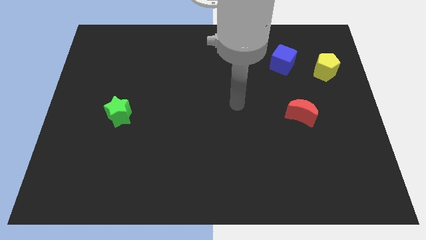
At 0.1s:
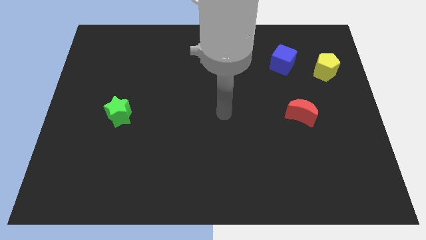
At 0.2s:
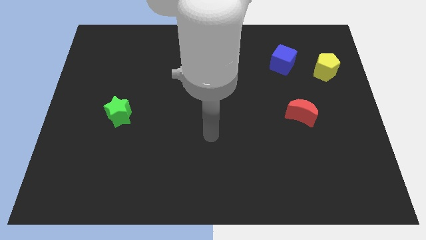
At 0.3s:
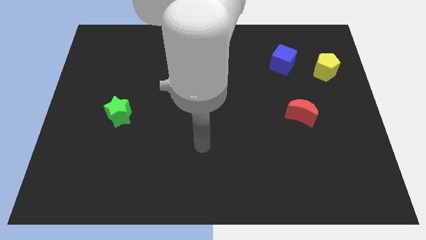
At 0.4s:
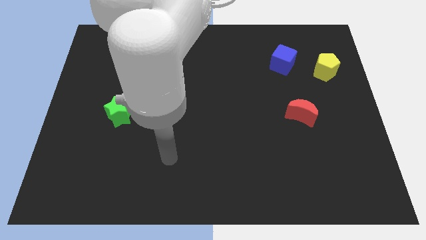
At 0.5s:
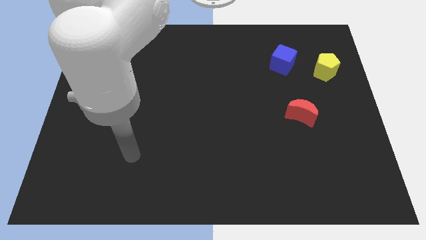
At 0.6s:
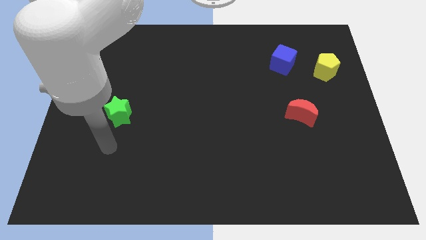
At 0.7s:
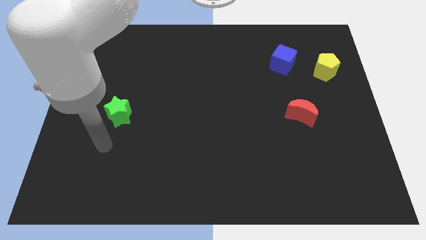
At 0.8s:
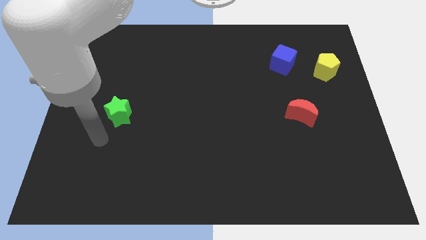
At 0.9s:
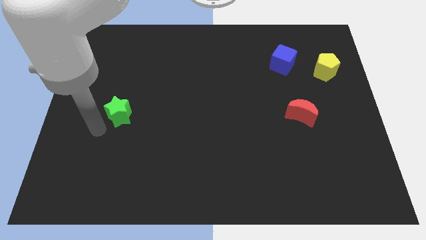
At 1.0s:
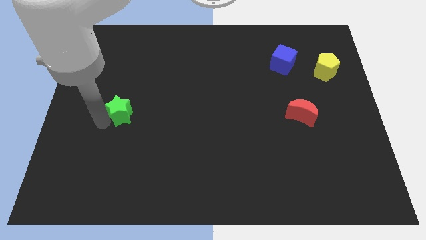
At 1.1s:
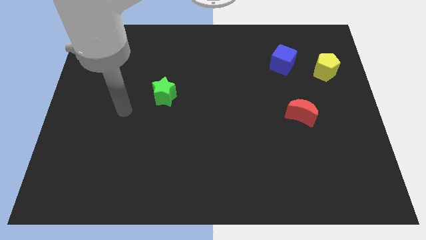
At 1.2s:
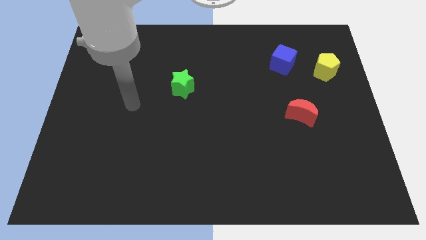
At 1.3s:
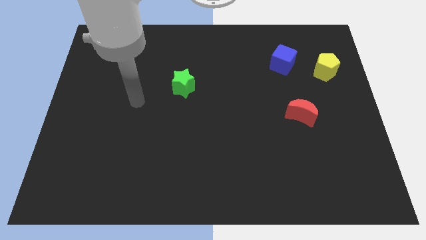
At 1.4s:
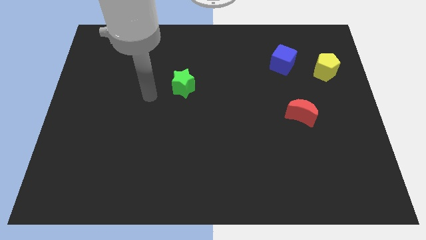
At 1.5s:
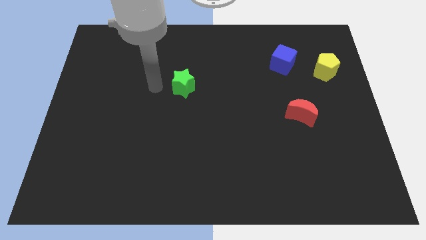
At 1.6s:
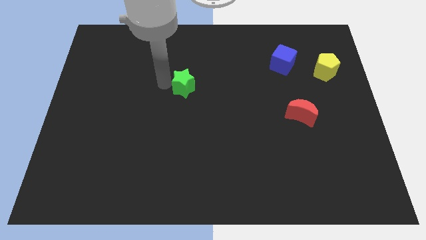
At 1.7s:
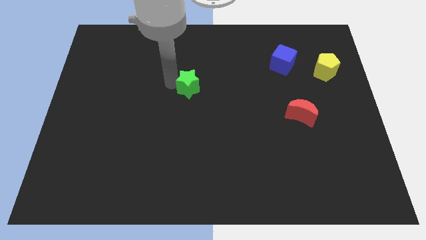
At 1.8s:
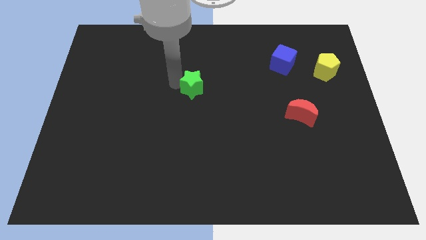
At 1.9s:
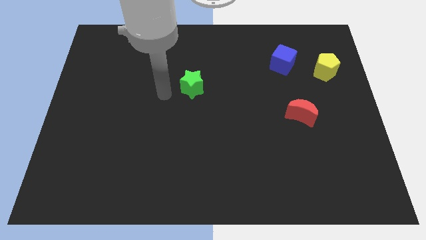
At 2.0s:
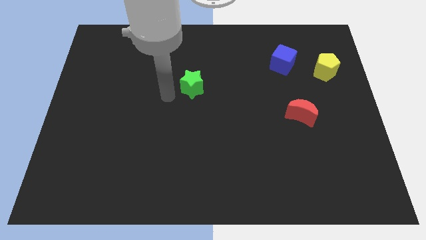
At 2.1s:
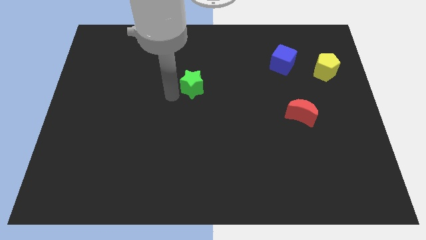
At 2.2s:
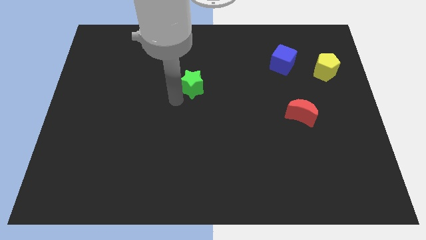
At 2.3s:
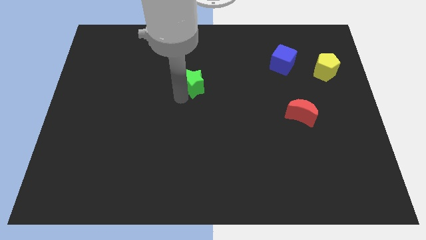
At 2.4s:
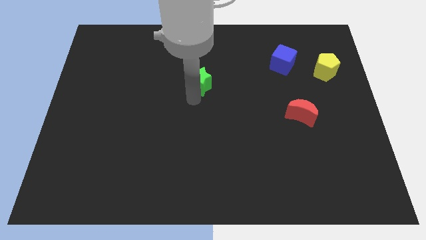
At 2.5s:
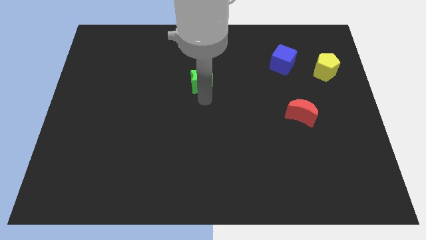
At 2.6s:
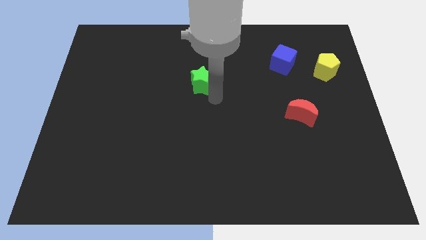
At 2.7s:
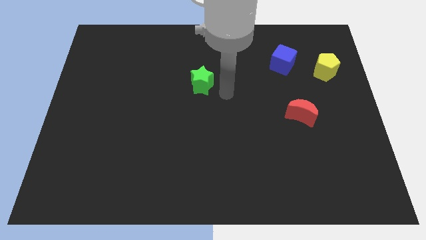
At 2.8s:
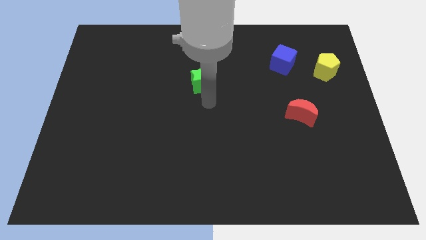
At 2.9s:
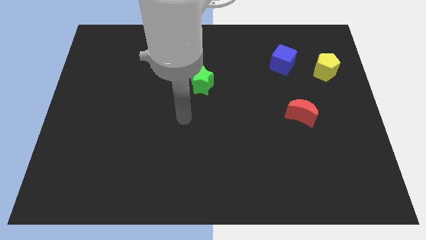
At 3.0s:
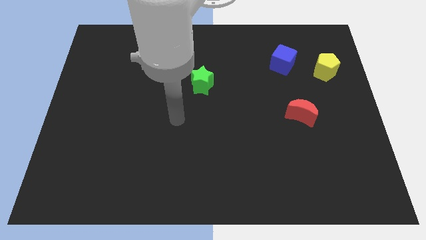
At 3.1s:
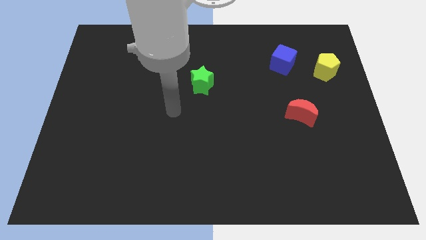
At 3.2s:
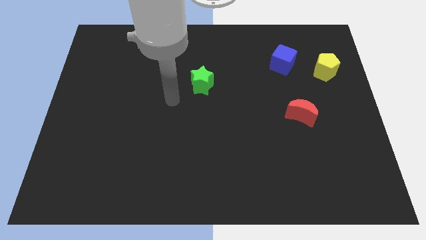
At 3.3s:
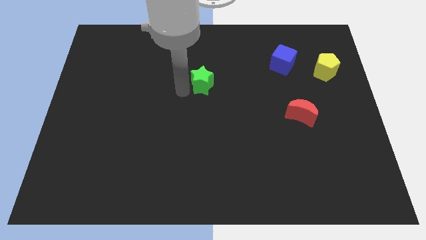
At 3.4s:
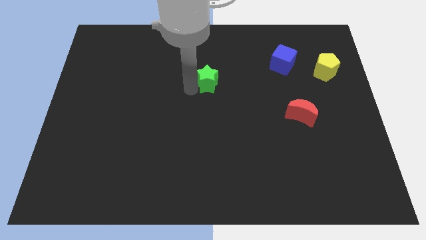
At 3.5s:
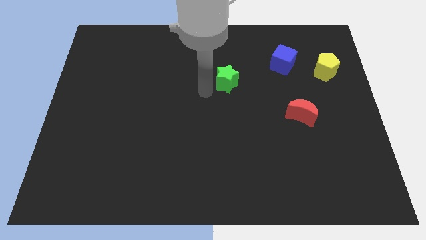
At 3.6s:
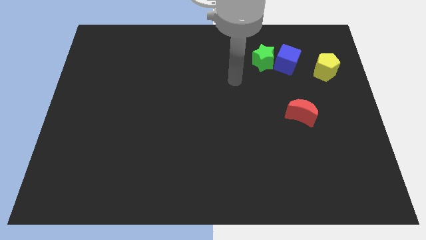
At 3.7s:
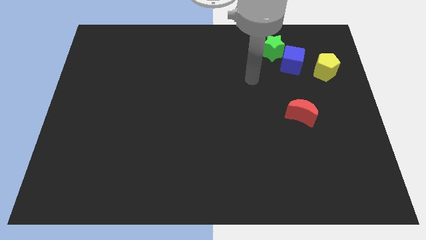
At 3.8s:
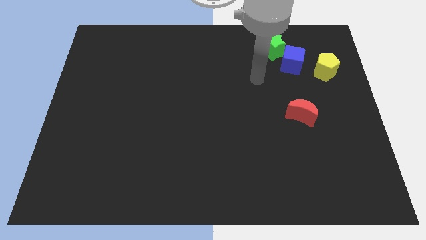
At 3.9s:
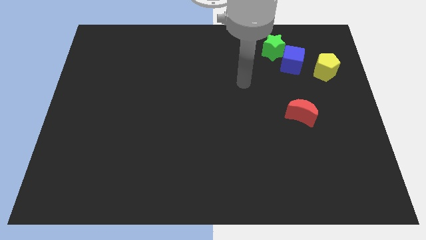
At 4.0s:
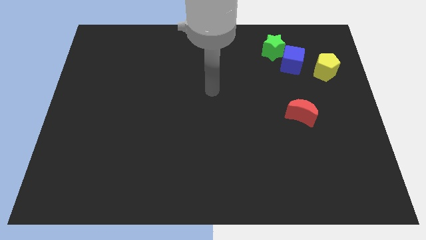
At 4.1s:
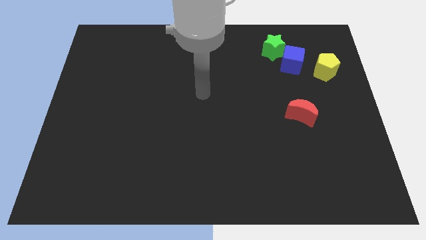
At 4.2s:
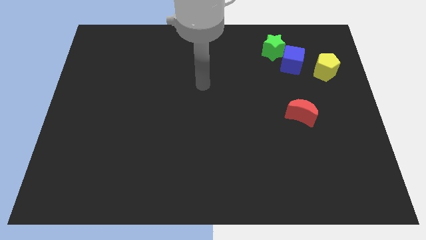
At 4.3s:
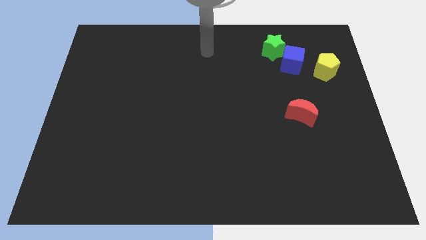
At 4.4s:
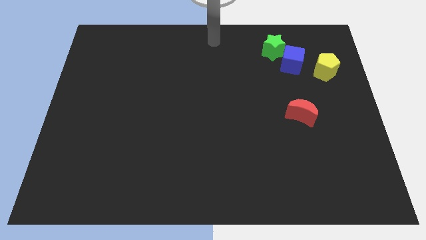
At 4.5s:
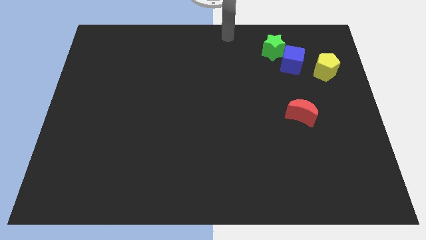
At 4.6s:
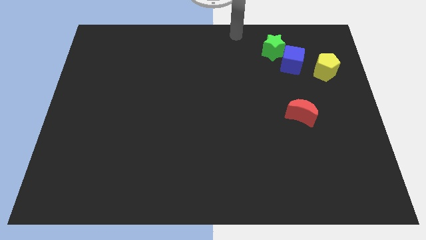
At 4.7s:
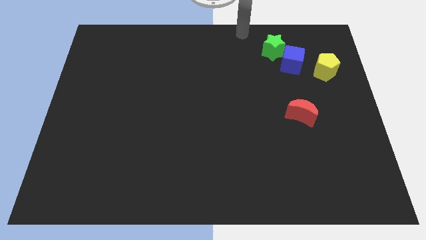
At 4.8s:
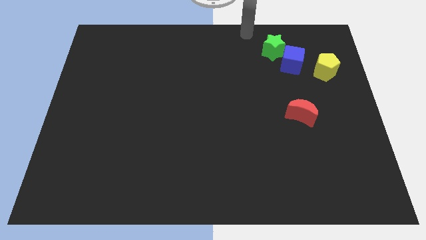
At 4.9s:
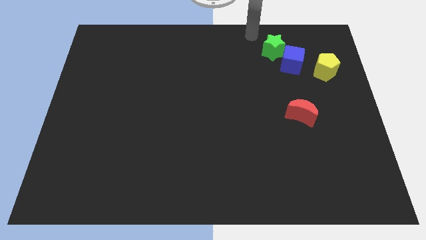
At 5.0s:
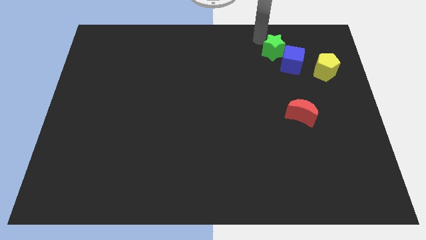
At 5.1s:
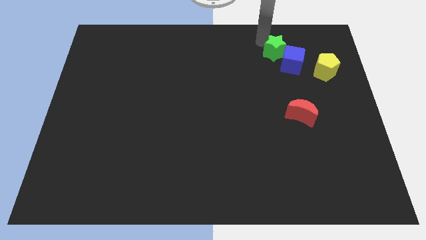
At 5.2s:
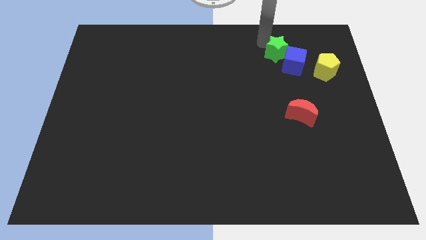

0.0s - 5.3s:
push the green block towards the blue cube

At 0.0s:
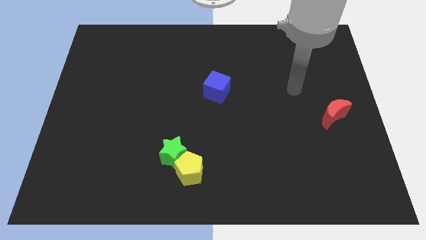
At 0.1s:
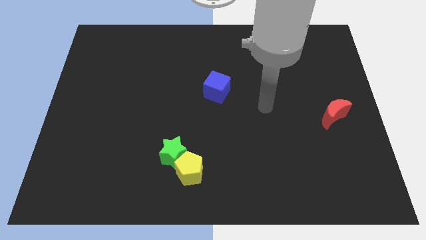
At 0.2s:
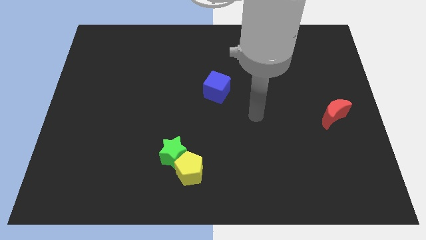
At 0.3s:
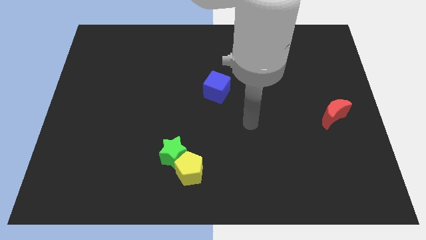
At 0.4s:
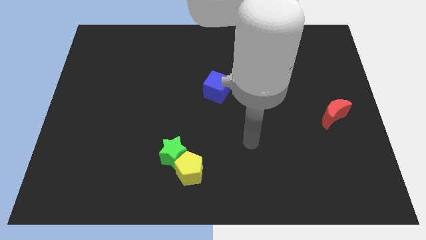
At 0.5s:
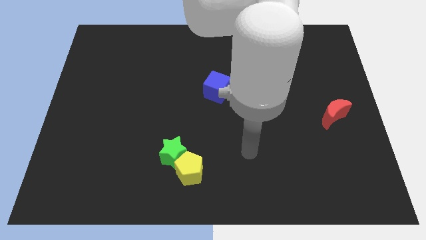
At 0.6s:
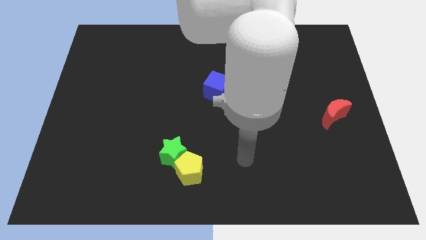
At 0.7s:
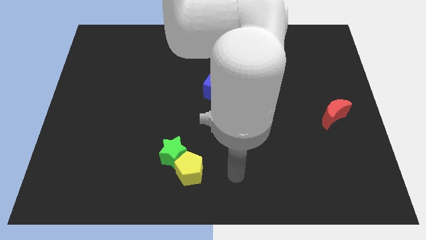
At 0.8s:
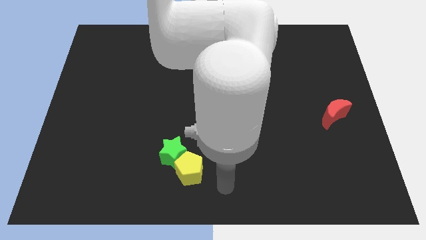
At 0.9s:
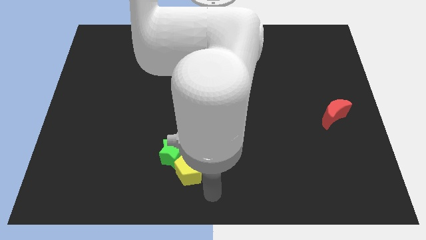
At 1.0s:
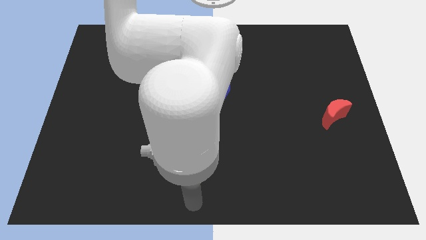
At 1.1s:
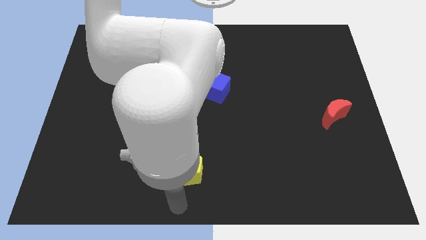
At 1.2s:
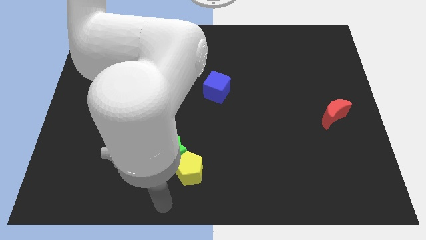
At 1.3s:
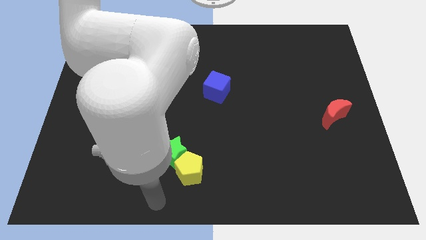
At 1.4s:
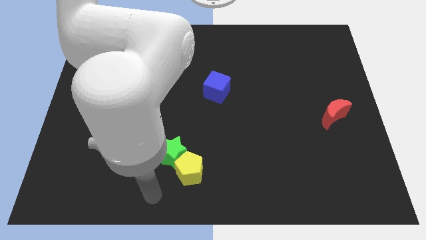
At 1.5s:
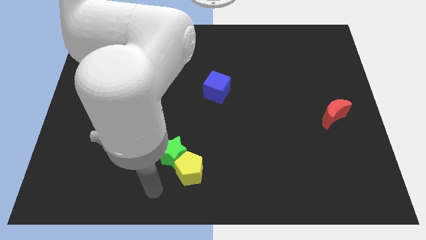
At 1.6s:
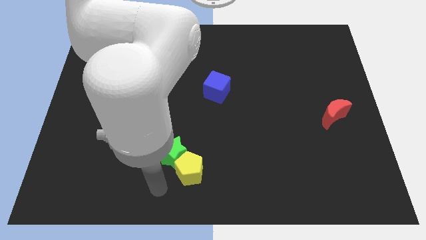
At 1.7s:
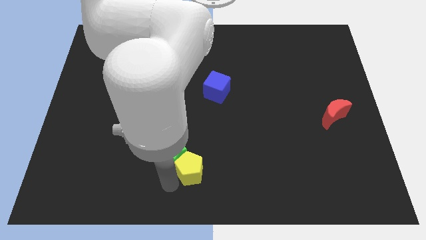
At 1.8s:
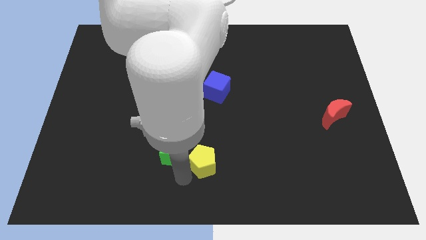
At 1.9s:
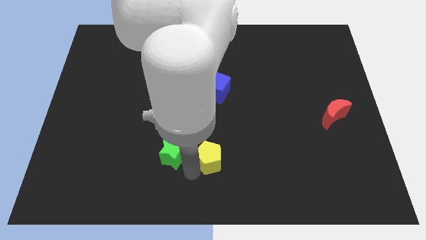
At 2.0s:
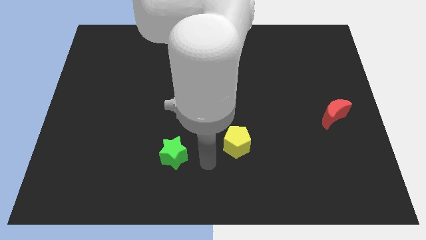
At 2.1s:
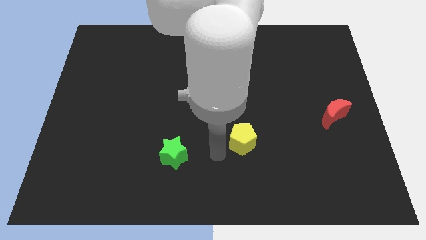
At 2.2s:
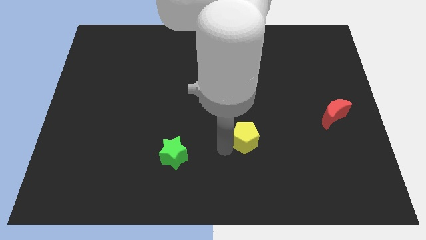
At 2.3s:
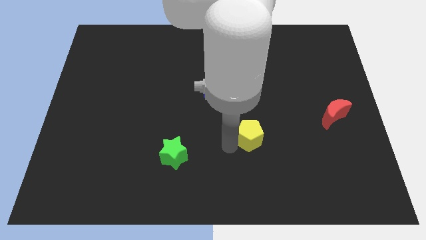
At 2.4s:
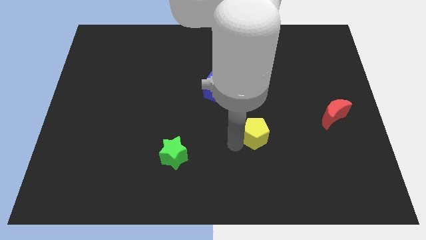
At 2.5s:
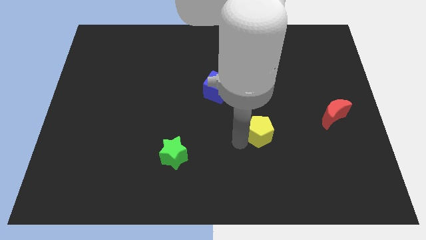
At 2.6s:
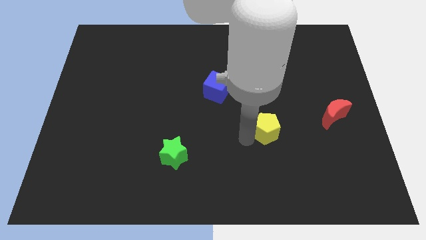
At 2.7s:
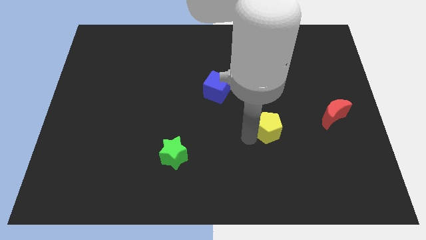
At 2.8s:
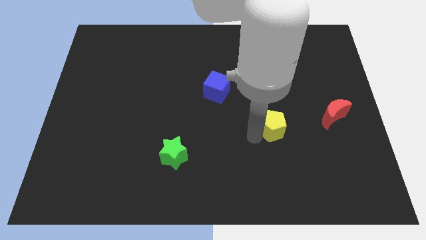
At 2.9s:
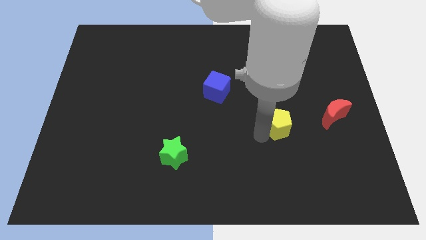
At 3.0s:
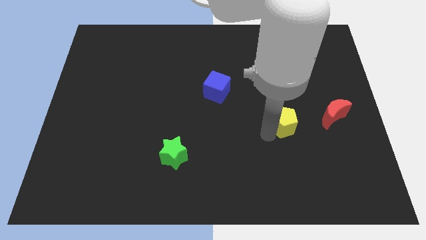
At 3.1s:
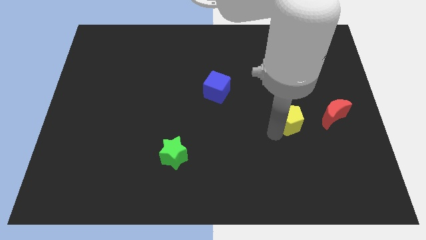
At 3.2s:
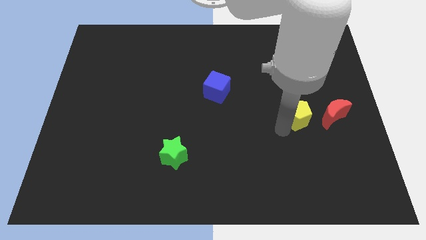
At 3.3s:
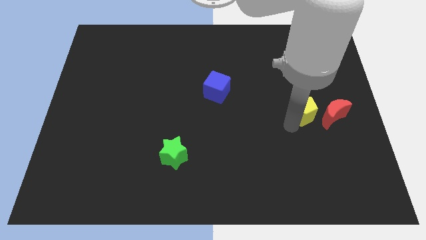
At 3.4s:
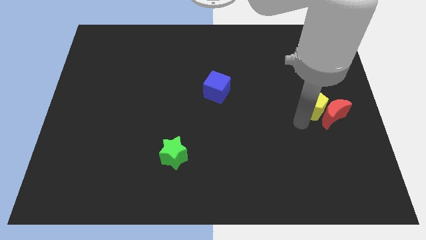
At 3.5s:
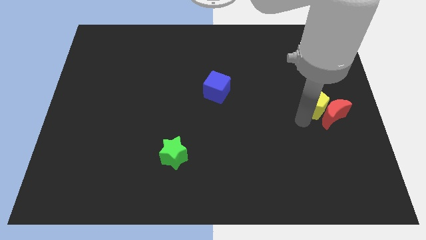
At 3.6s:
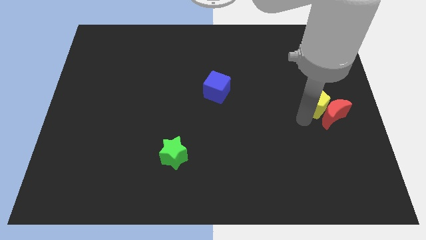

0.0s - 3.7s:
slide the yellow pentagon next to the red block
